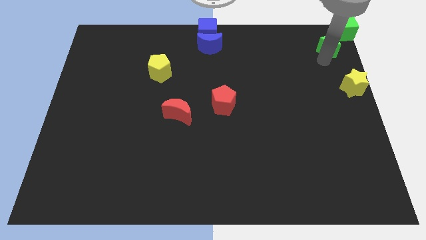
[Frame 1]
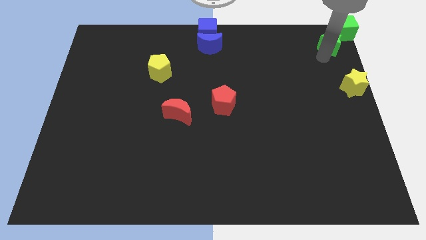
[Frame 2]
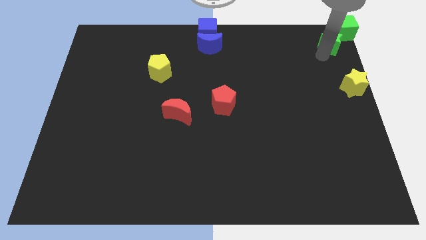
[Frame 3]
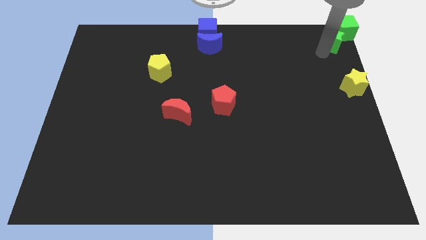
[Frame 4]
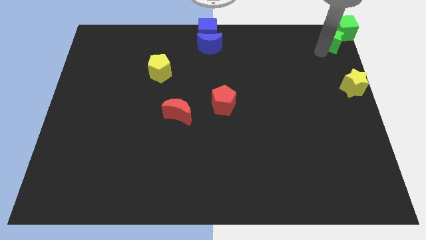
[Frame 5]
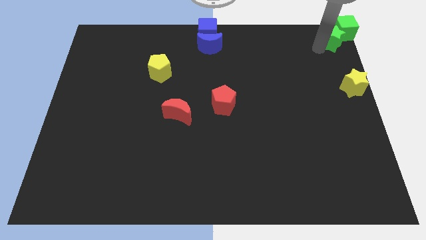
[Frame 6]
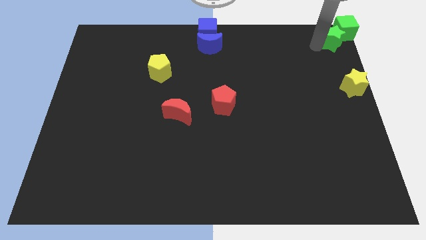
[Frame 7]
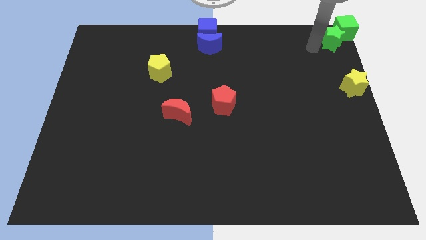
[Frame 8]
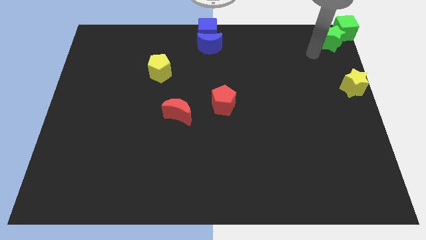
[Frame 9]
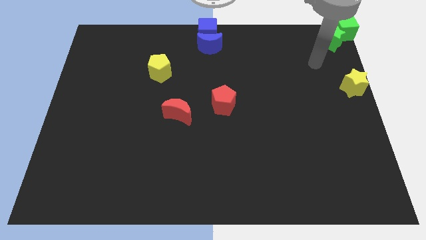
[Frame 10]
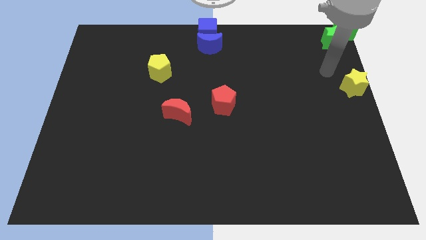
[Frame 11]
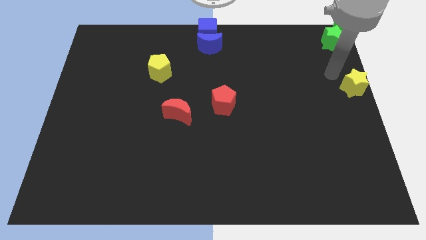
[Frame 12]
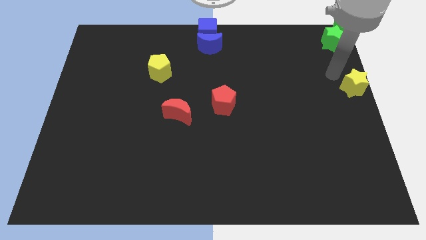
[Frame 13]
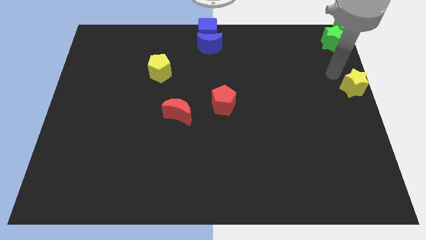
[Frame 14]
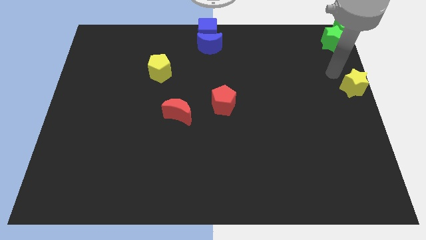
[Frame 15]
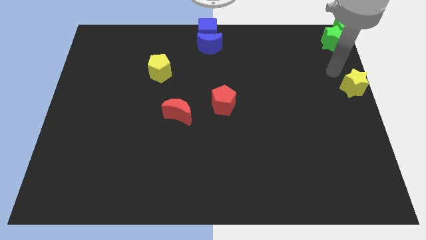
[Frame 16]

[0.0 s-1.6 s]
push the green star into the green cube

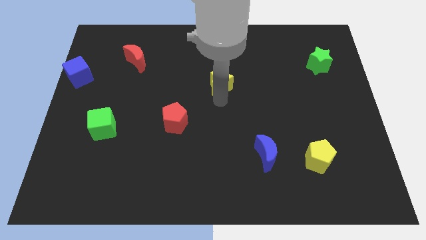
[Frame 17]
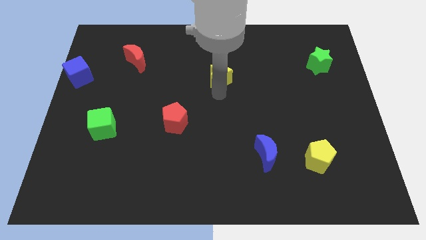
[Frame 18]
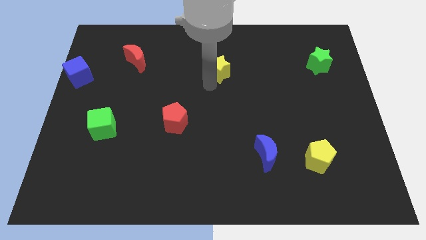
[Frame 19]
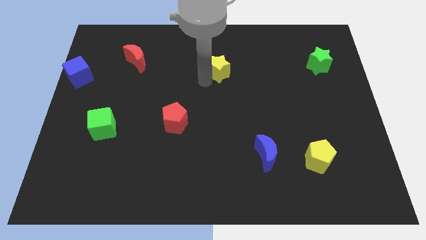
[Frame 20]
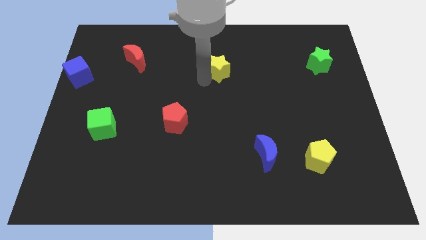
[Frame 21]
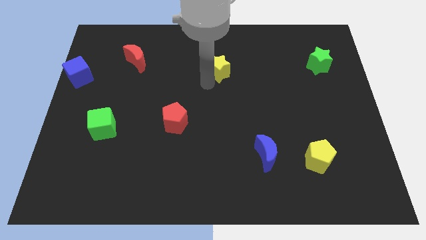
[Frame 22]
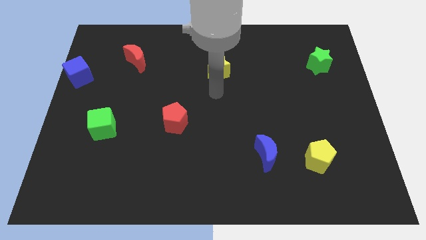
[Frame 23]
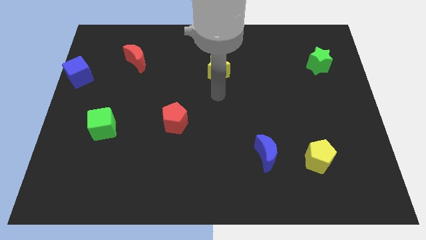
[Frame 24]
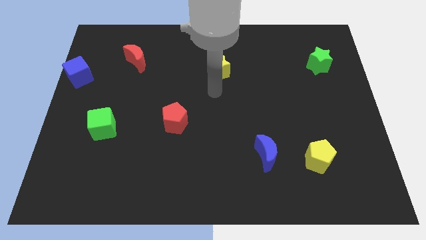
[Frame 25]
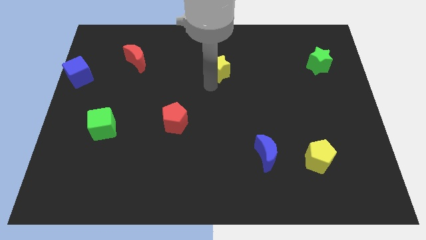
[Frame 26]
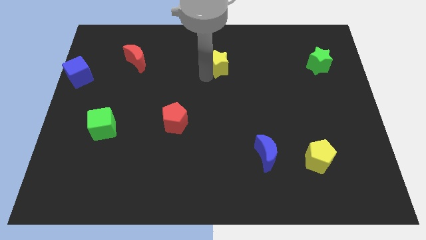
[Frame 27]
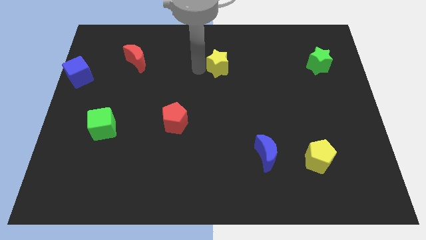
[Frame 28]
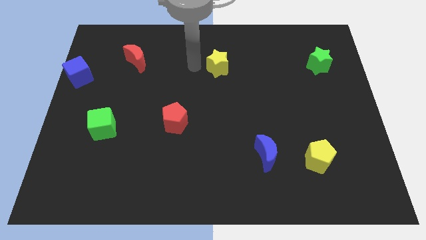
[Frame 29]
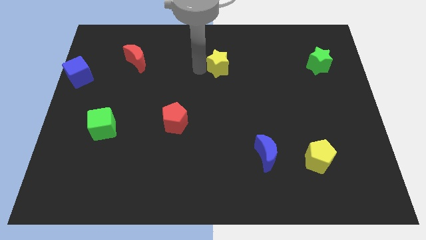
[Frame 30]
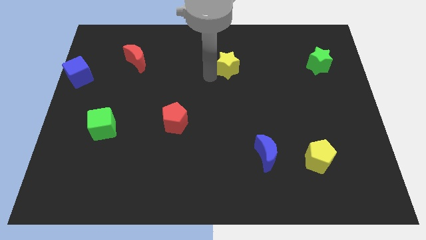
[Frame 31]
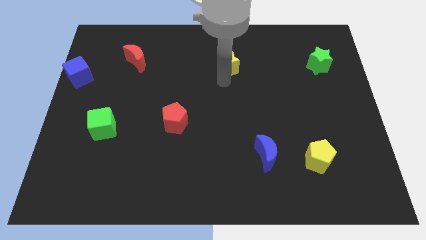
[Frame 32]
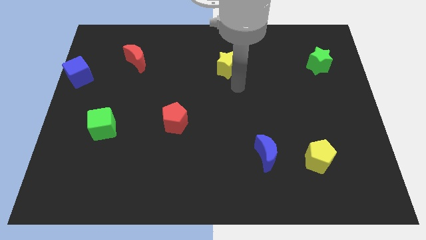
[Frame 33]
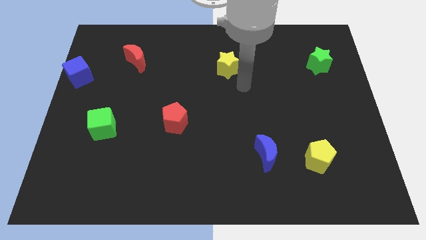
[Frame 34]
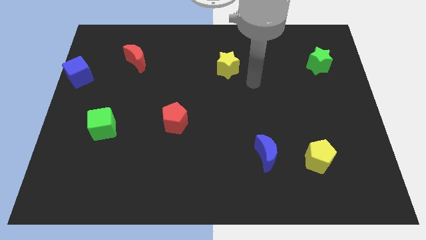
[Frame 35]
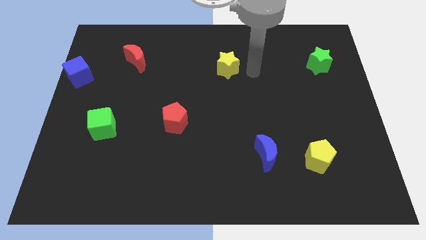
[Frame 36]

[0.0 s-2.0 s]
move the yellow star to the right of red moon

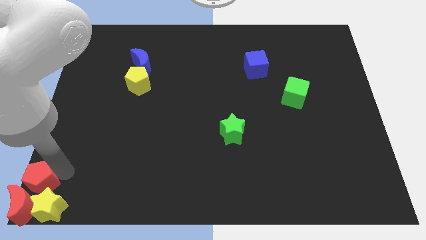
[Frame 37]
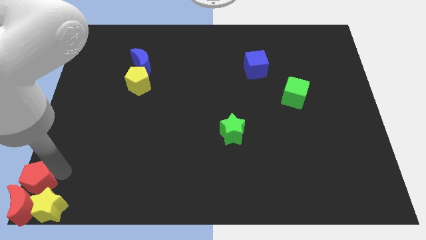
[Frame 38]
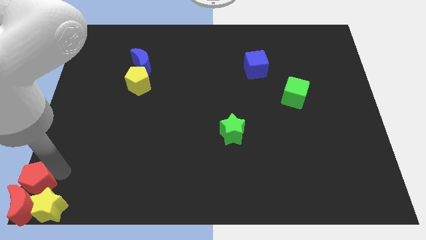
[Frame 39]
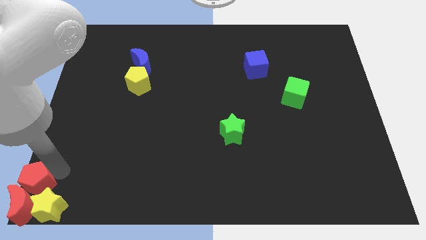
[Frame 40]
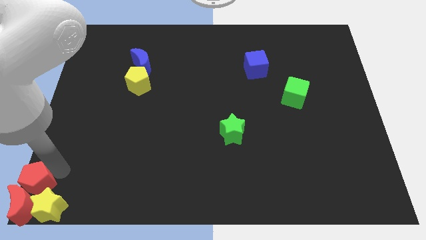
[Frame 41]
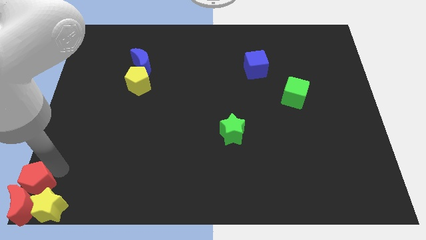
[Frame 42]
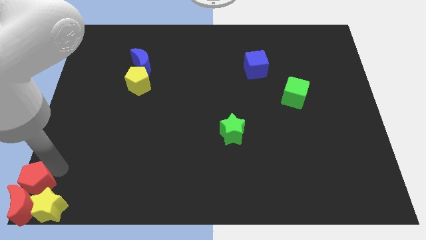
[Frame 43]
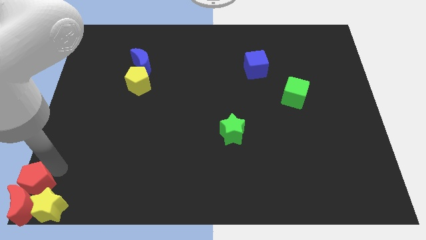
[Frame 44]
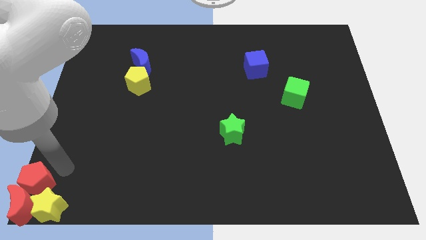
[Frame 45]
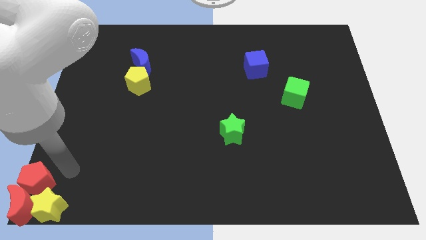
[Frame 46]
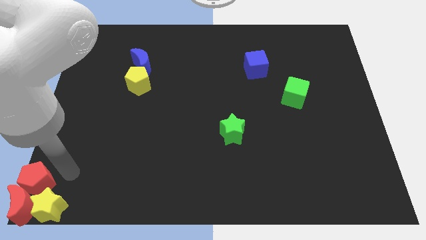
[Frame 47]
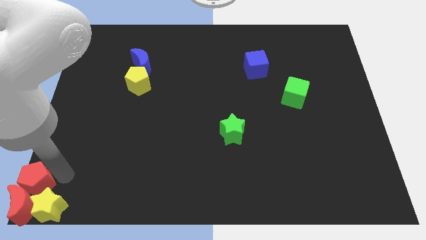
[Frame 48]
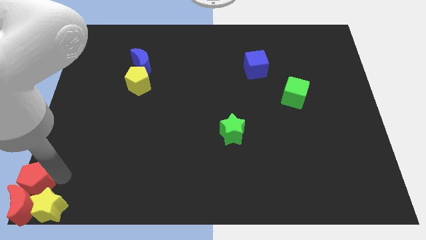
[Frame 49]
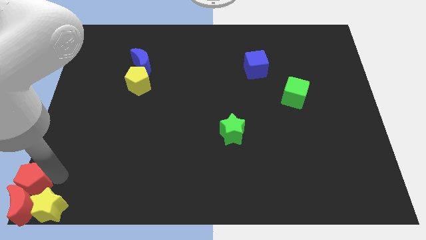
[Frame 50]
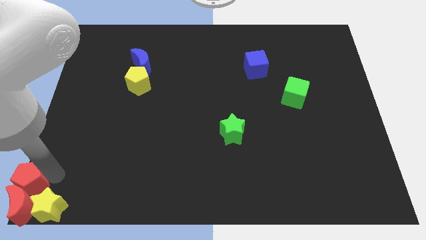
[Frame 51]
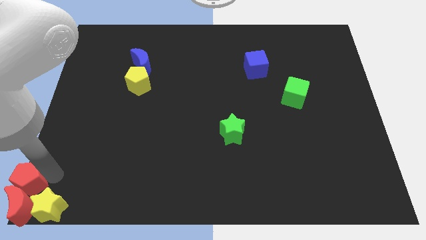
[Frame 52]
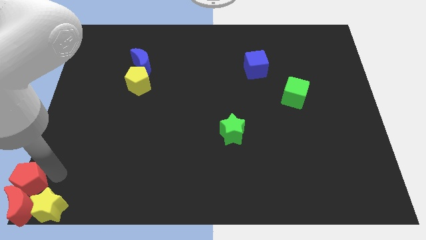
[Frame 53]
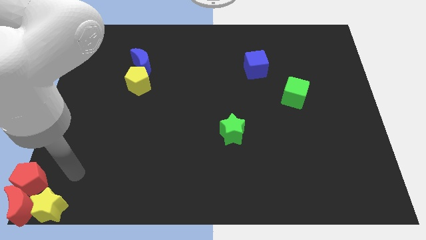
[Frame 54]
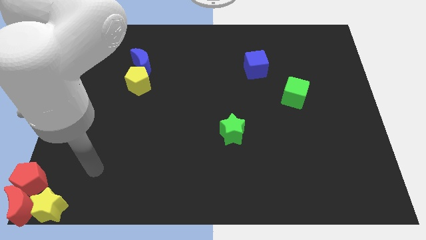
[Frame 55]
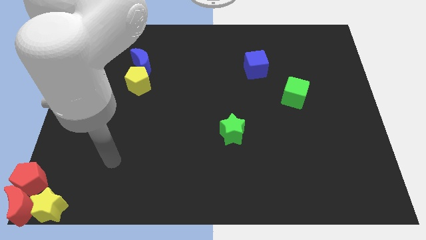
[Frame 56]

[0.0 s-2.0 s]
place the red pentagon at the top side of the red crescent

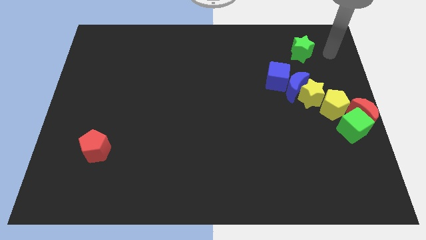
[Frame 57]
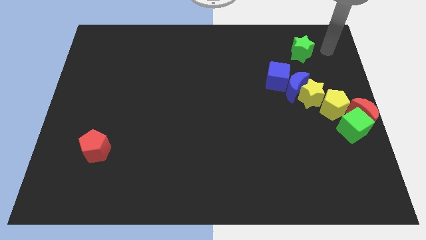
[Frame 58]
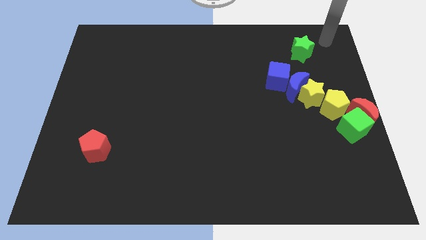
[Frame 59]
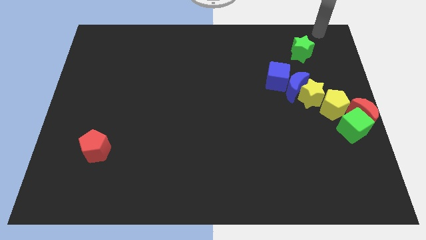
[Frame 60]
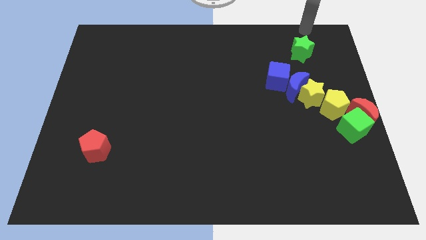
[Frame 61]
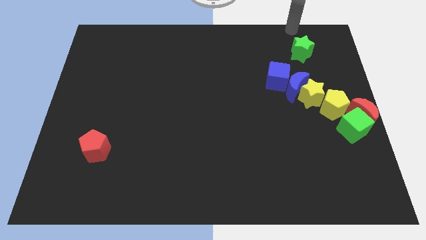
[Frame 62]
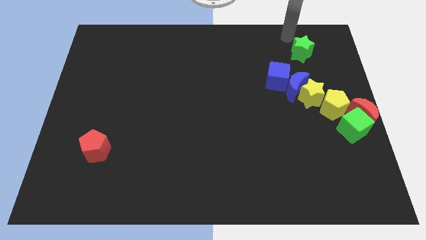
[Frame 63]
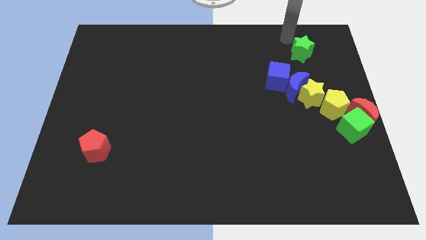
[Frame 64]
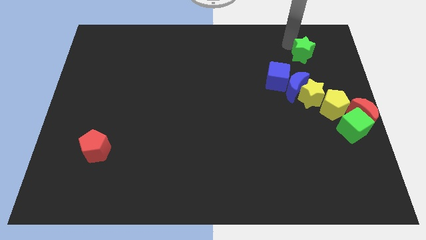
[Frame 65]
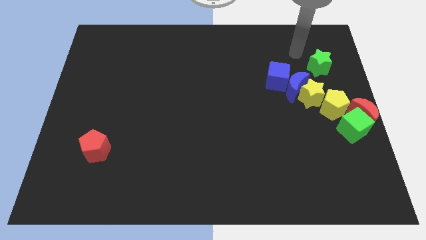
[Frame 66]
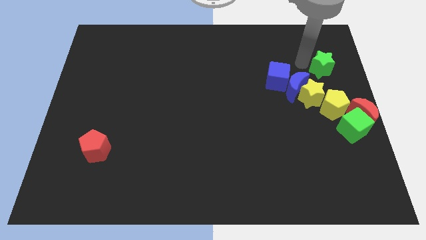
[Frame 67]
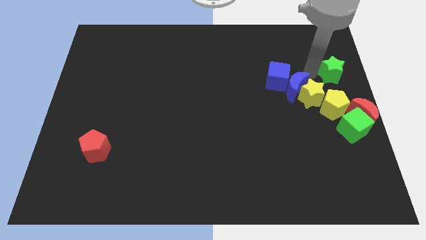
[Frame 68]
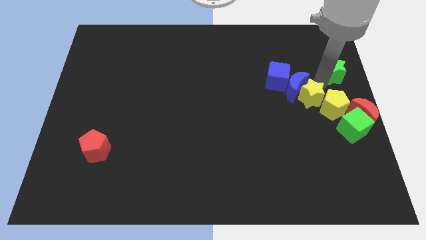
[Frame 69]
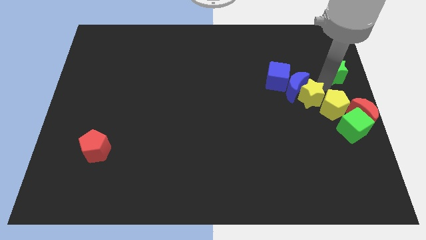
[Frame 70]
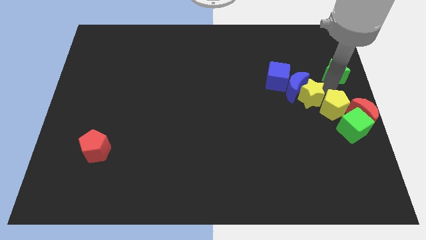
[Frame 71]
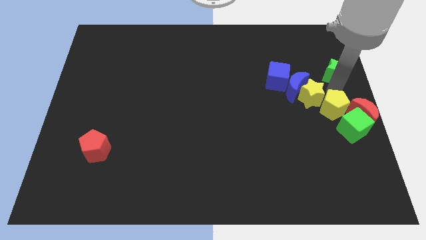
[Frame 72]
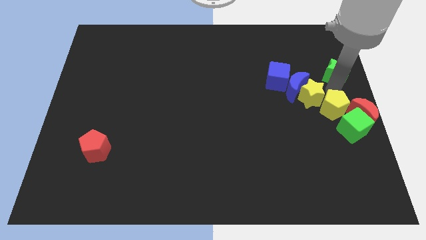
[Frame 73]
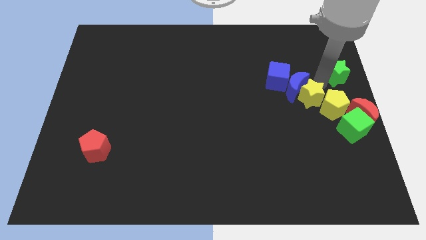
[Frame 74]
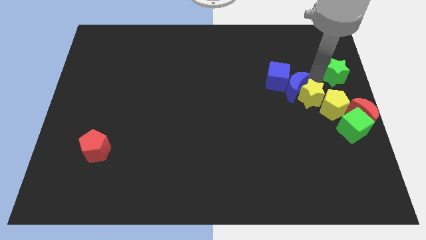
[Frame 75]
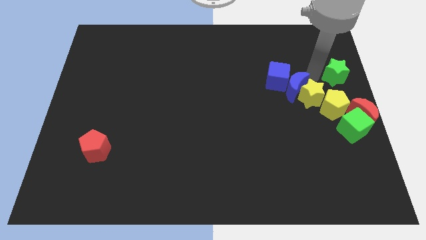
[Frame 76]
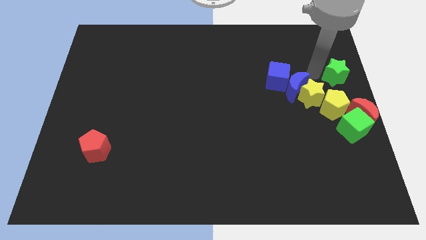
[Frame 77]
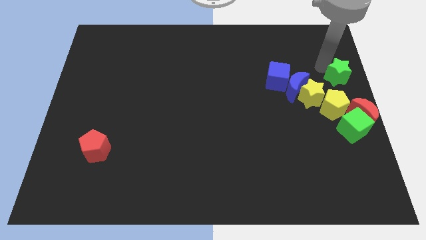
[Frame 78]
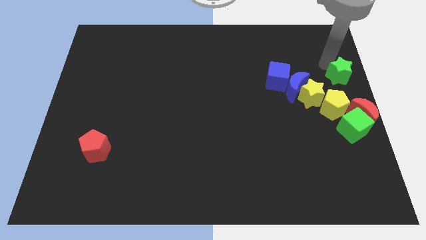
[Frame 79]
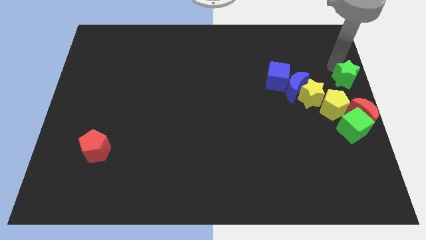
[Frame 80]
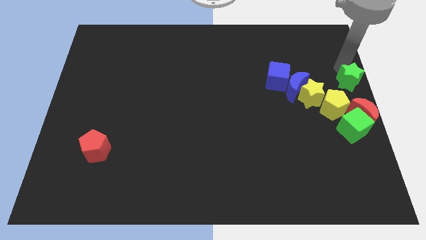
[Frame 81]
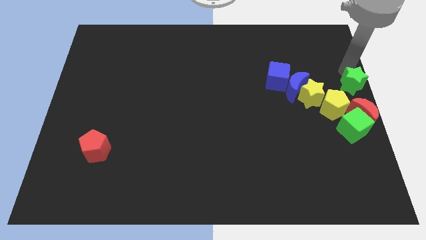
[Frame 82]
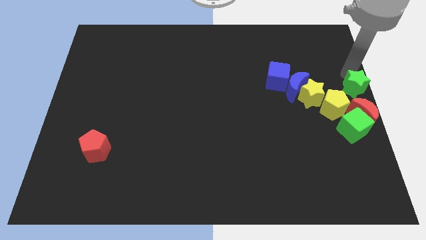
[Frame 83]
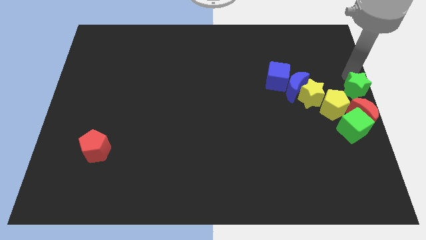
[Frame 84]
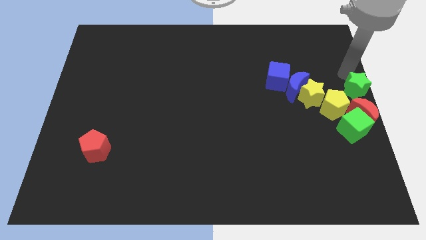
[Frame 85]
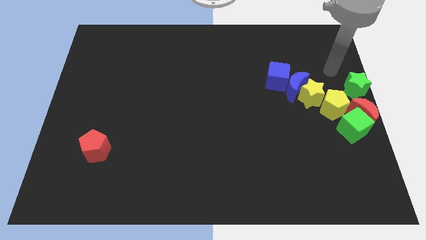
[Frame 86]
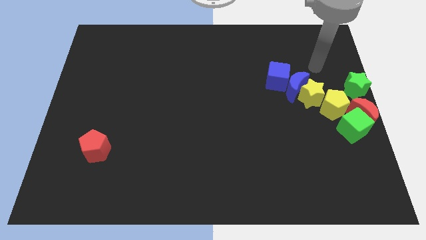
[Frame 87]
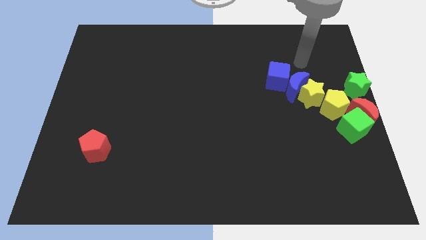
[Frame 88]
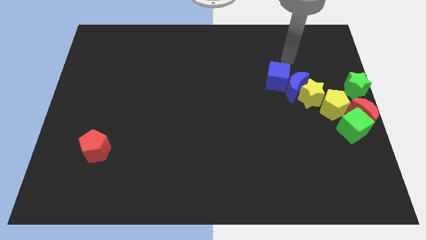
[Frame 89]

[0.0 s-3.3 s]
move the green star to the top side of the red moon

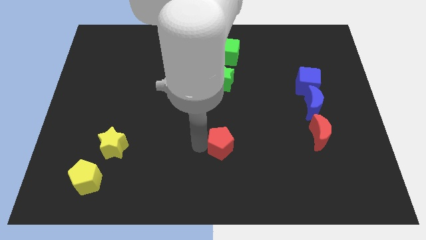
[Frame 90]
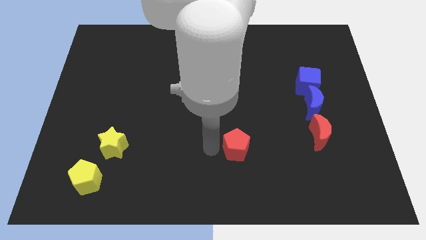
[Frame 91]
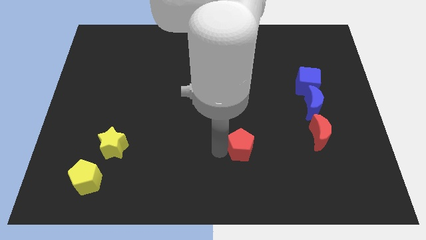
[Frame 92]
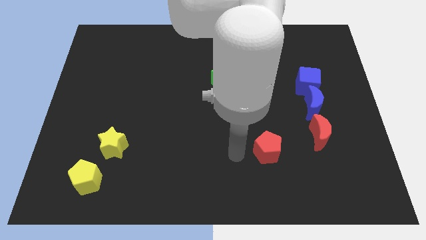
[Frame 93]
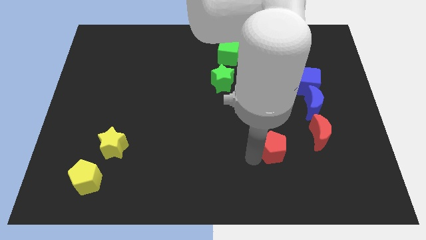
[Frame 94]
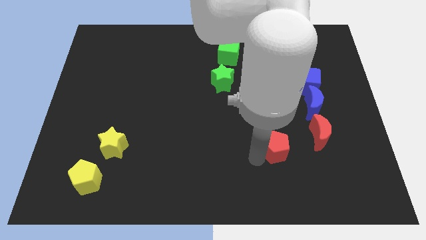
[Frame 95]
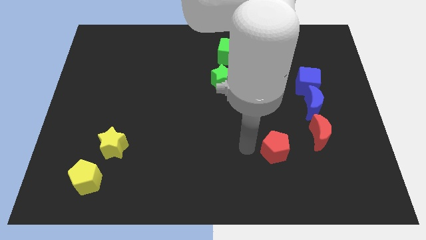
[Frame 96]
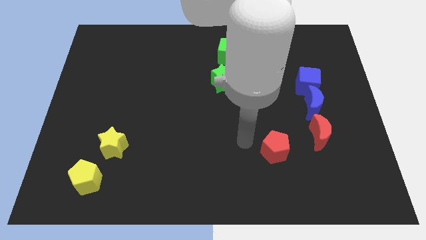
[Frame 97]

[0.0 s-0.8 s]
move the red pentagon towards the vertical line of blocks
